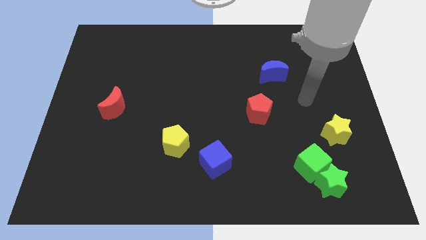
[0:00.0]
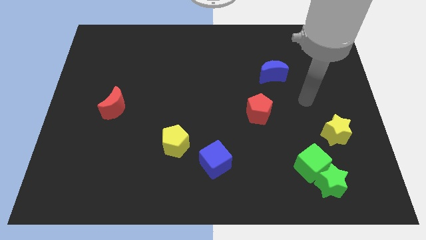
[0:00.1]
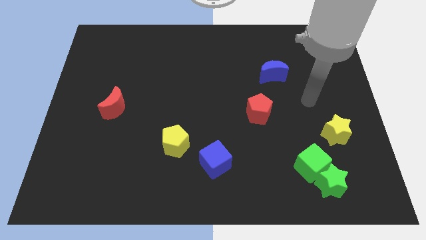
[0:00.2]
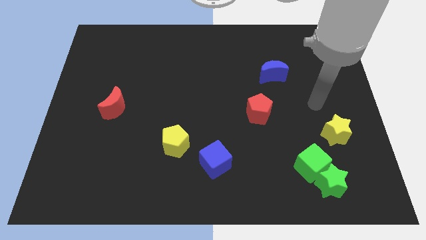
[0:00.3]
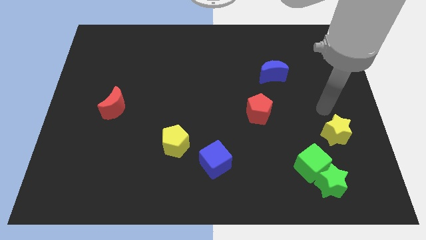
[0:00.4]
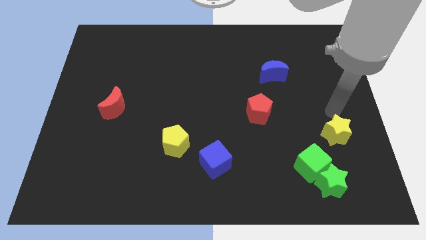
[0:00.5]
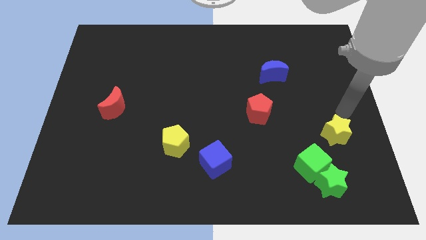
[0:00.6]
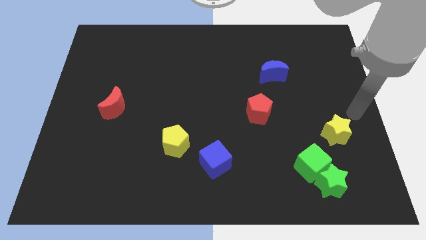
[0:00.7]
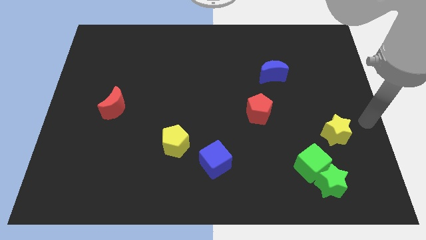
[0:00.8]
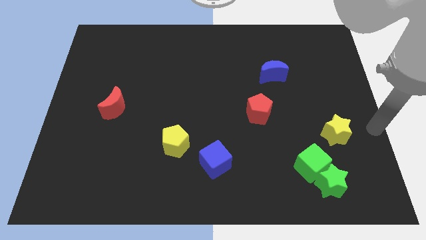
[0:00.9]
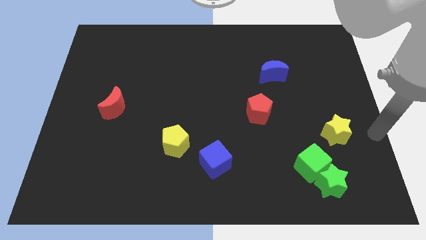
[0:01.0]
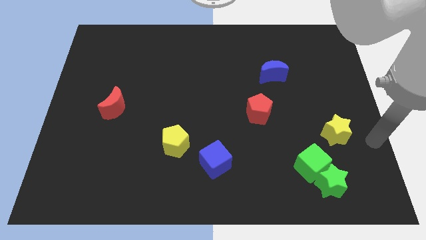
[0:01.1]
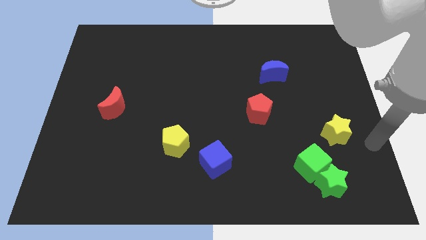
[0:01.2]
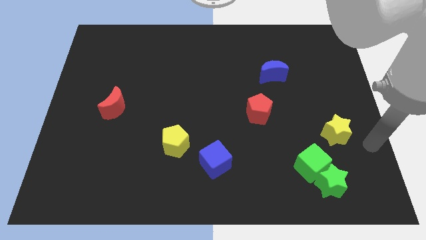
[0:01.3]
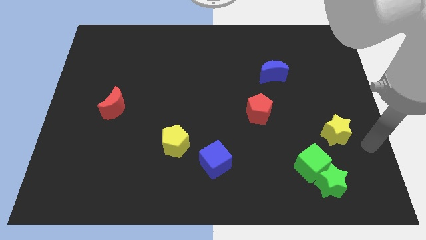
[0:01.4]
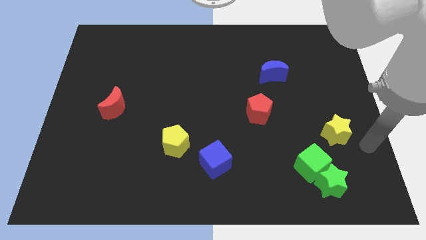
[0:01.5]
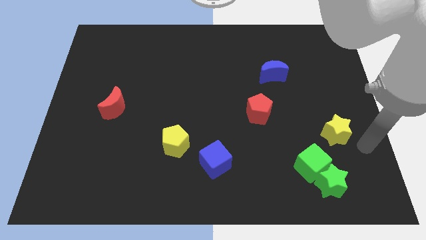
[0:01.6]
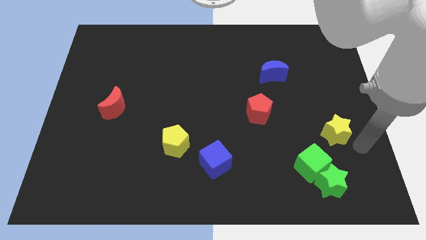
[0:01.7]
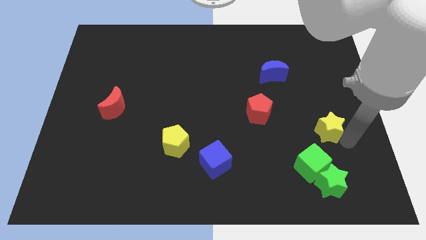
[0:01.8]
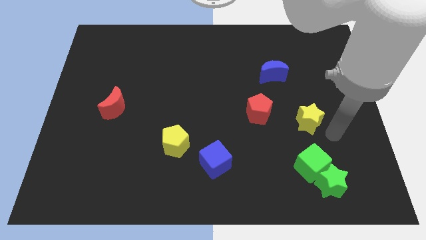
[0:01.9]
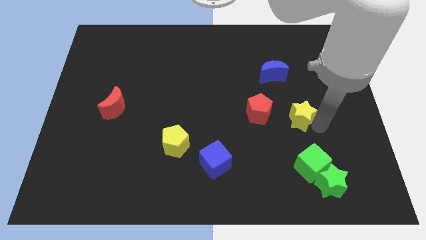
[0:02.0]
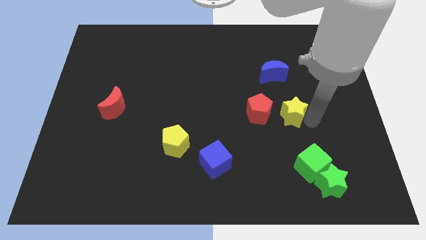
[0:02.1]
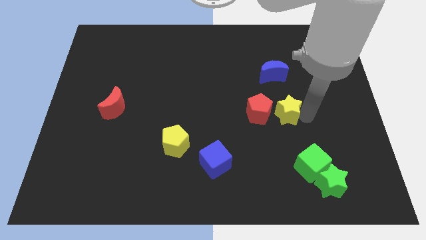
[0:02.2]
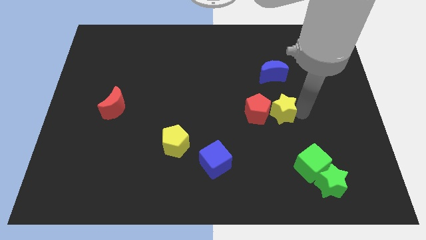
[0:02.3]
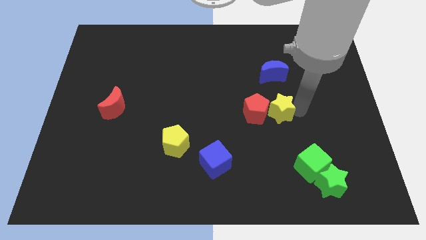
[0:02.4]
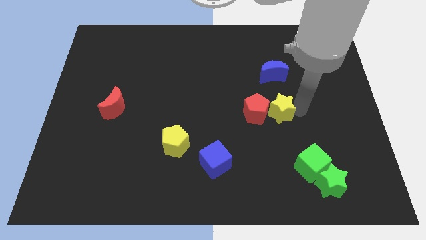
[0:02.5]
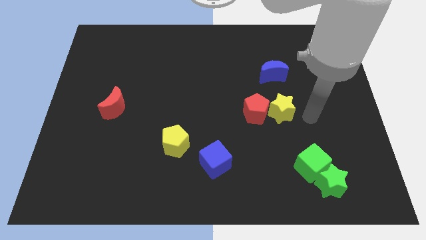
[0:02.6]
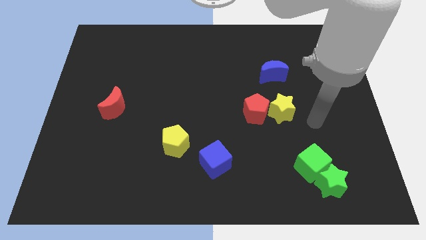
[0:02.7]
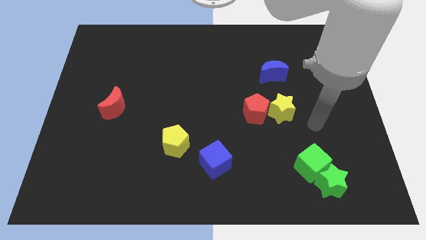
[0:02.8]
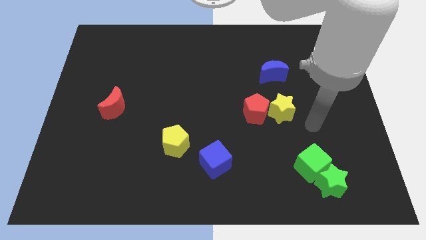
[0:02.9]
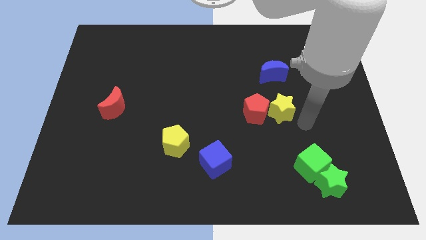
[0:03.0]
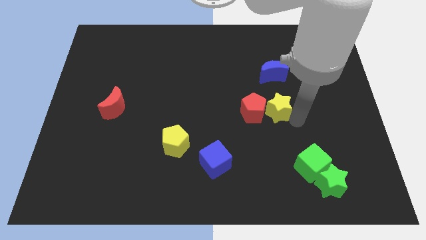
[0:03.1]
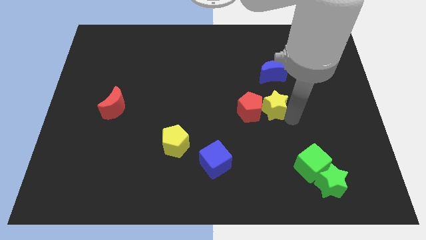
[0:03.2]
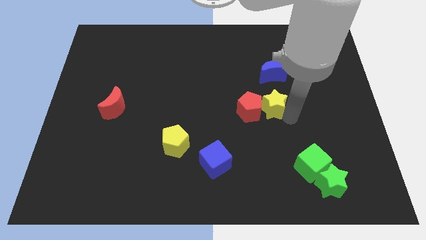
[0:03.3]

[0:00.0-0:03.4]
push the yellow star into the red pentagon

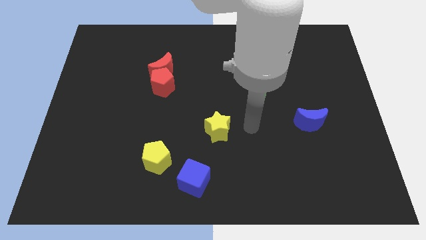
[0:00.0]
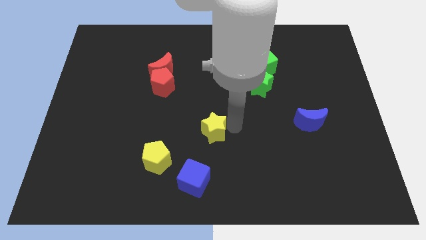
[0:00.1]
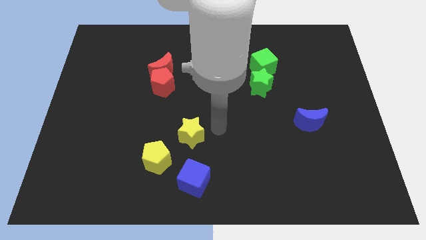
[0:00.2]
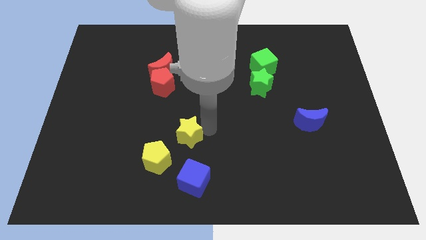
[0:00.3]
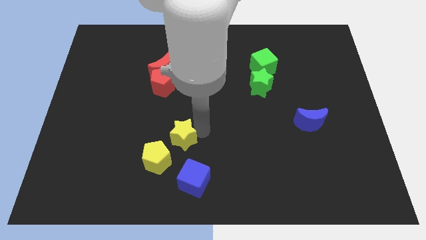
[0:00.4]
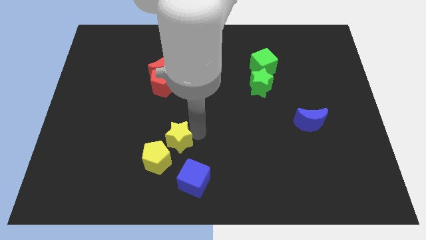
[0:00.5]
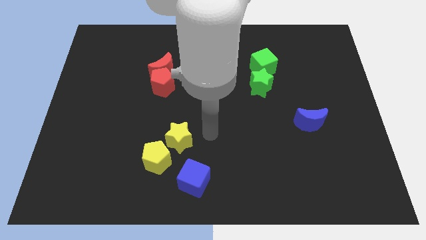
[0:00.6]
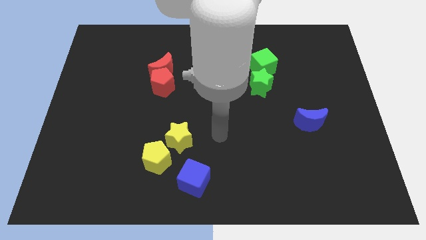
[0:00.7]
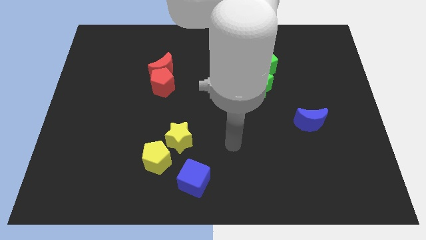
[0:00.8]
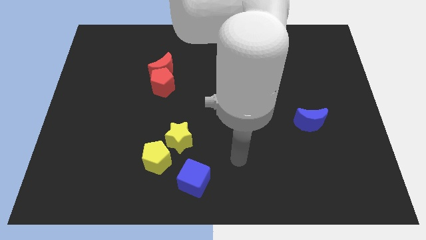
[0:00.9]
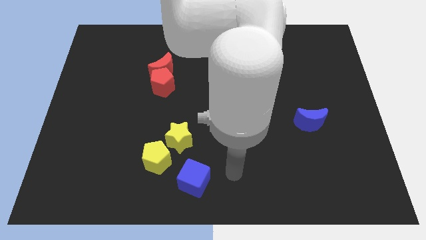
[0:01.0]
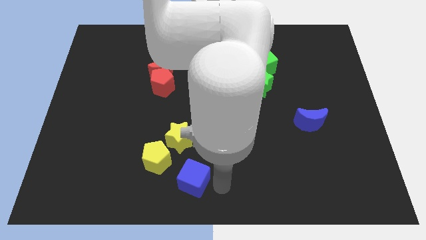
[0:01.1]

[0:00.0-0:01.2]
push the yellow star to the top right of the yellow pentagon

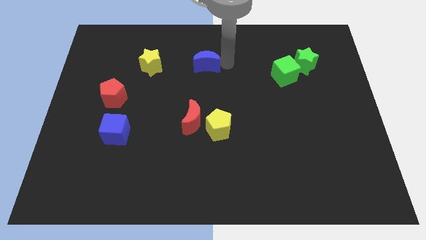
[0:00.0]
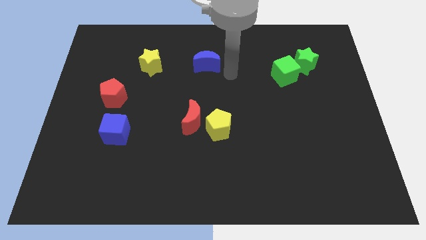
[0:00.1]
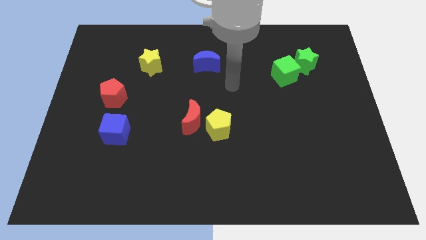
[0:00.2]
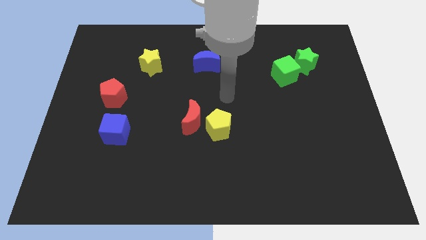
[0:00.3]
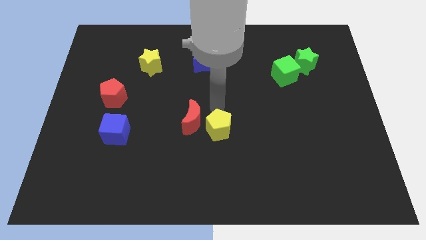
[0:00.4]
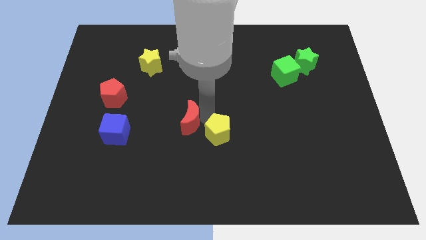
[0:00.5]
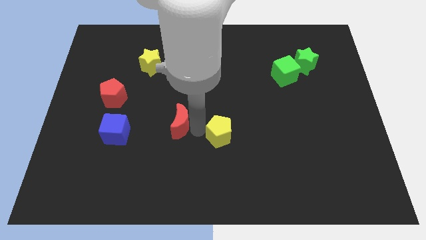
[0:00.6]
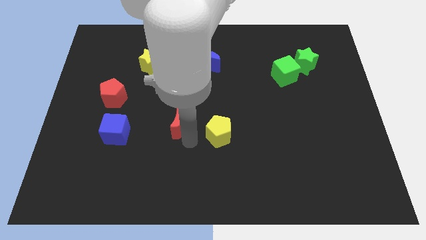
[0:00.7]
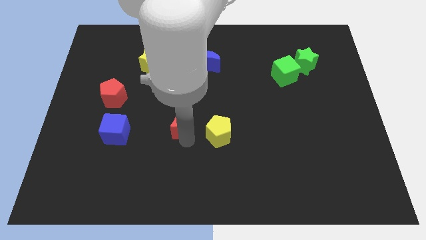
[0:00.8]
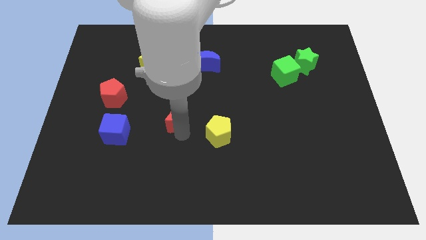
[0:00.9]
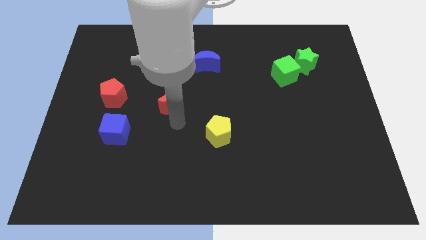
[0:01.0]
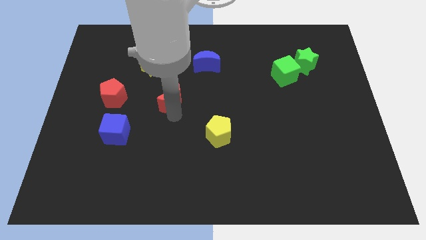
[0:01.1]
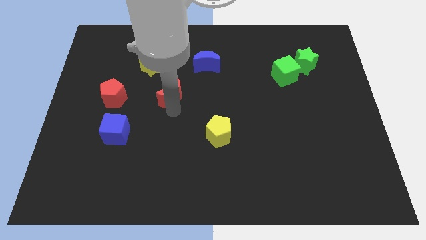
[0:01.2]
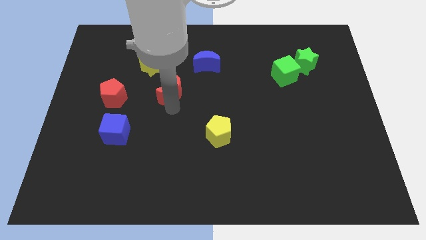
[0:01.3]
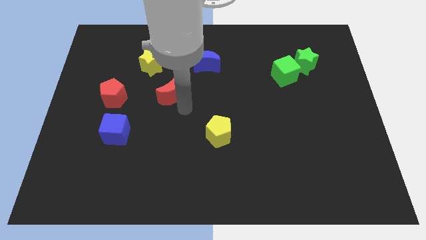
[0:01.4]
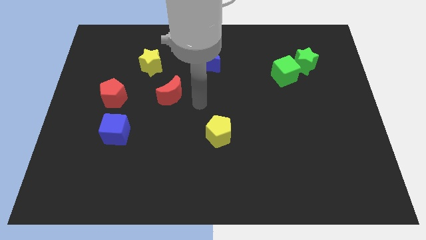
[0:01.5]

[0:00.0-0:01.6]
place your arm in between red moon and yellow pentagon

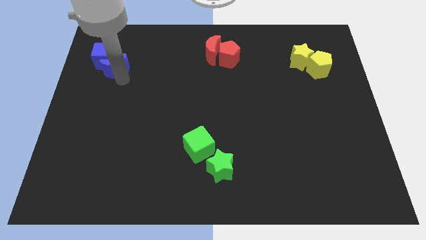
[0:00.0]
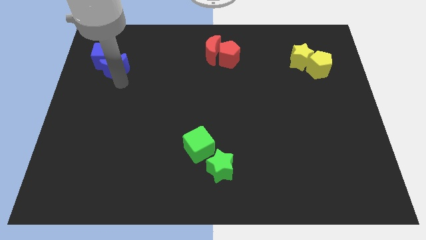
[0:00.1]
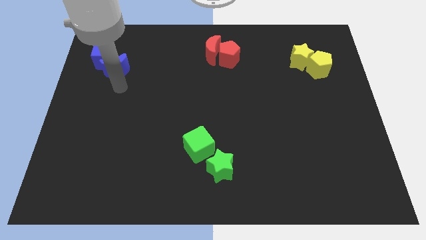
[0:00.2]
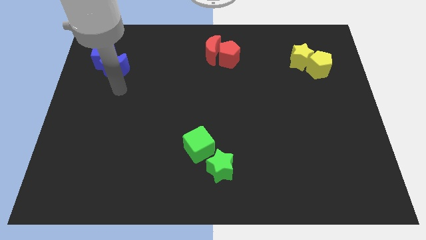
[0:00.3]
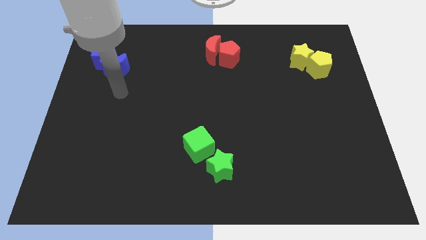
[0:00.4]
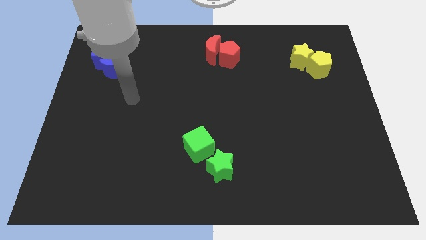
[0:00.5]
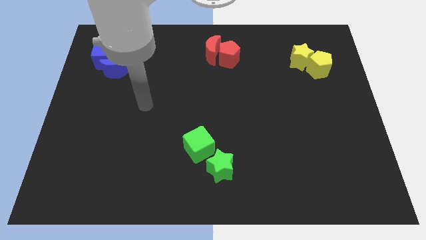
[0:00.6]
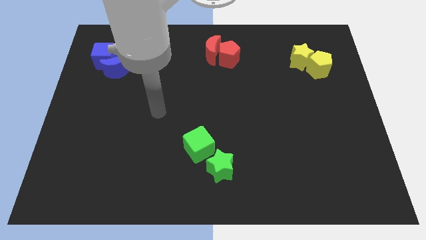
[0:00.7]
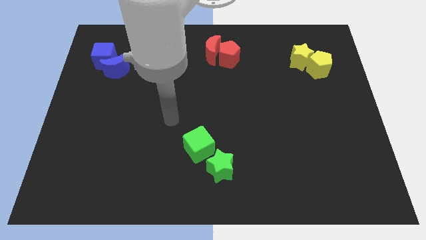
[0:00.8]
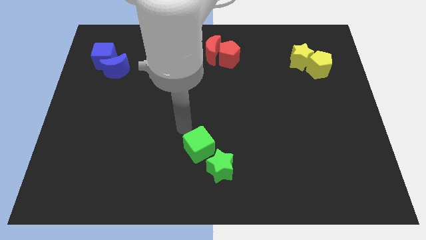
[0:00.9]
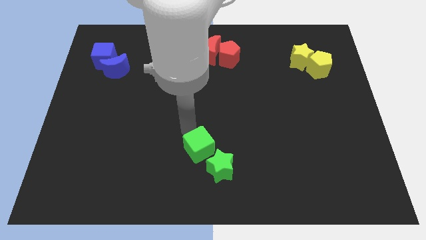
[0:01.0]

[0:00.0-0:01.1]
move away from blue moon

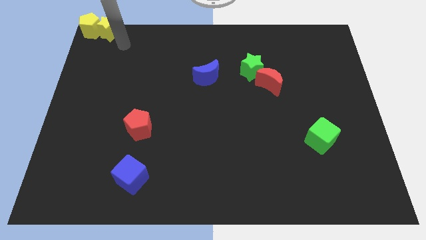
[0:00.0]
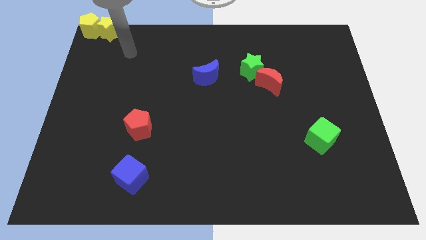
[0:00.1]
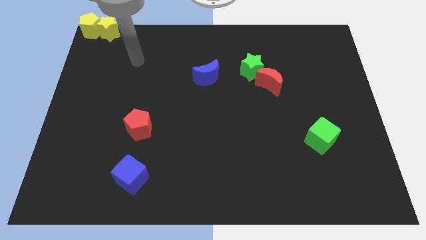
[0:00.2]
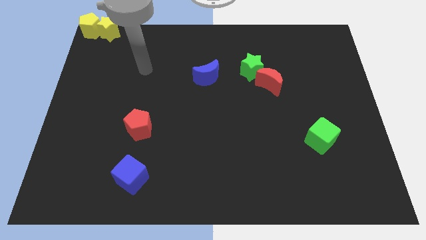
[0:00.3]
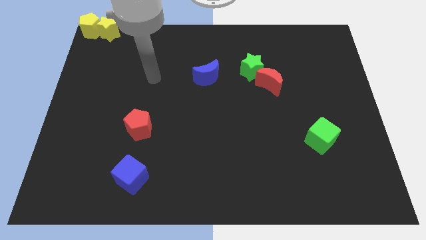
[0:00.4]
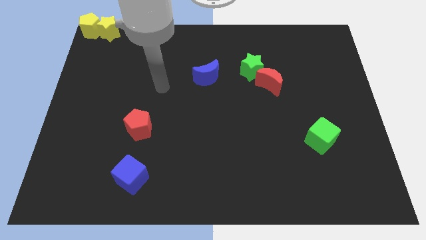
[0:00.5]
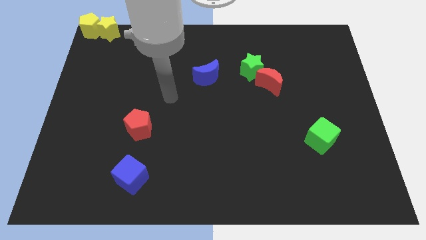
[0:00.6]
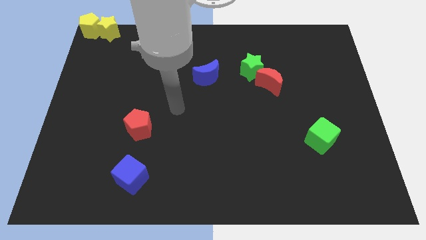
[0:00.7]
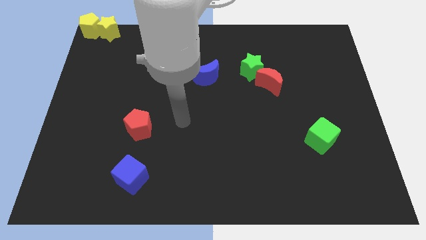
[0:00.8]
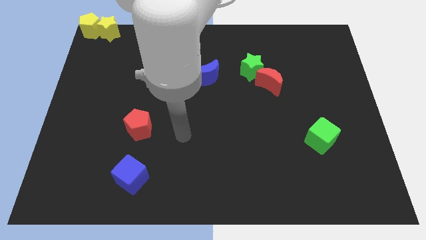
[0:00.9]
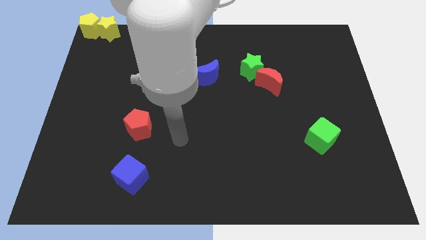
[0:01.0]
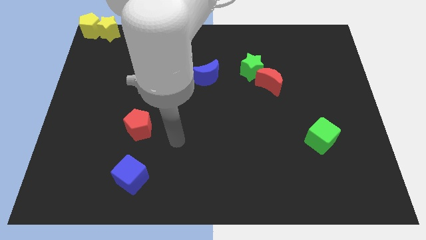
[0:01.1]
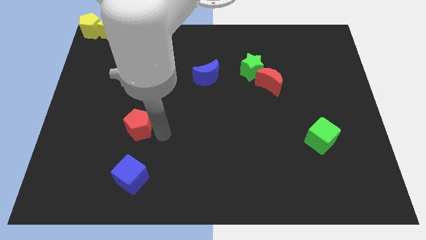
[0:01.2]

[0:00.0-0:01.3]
move your arm to the right of the red pentagon

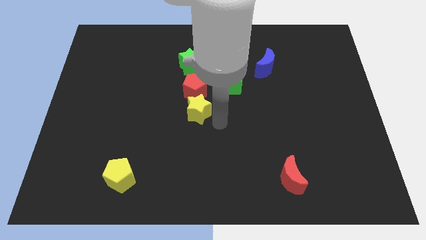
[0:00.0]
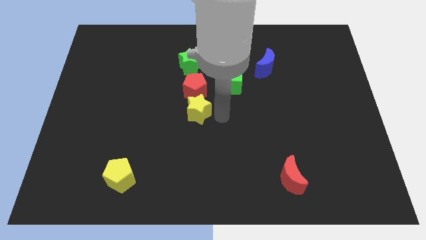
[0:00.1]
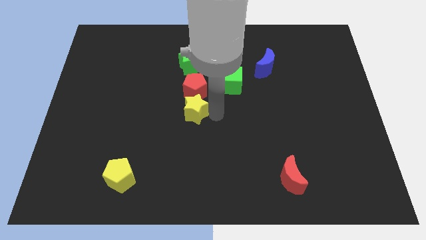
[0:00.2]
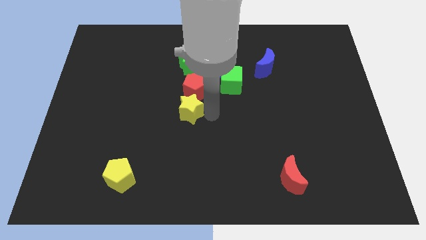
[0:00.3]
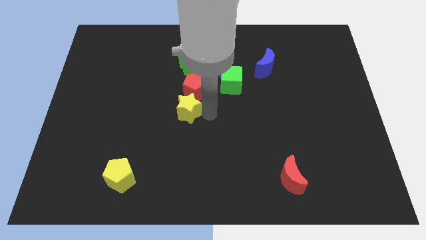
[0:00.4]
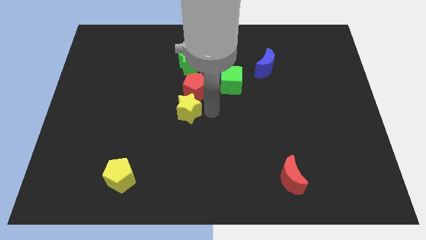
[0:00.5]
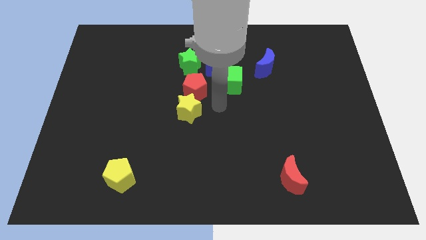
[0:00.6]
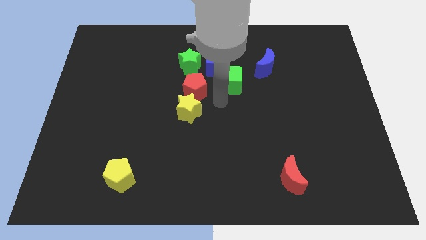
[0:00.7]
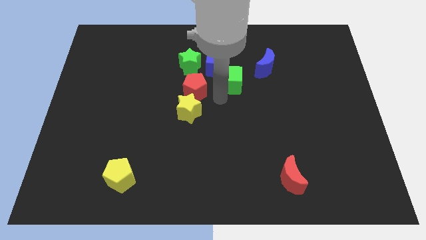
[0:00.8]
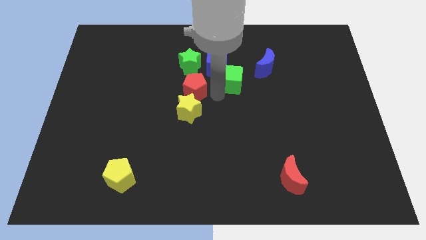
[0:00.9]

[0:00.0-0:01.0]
place arm on the bottom of green cube
